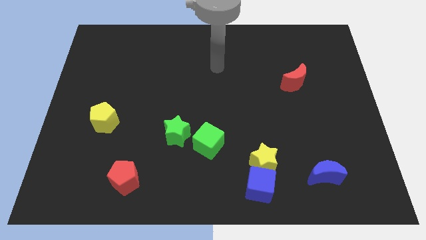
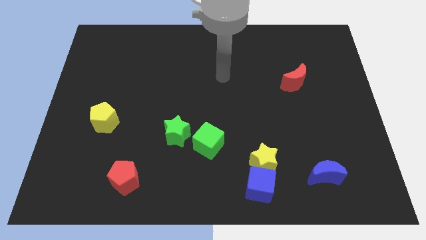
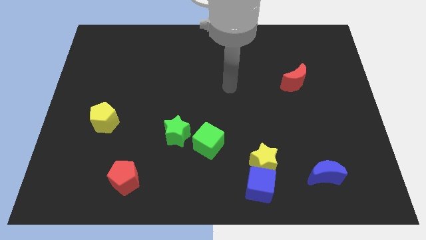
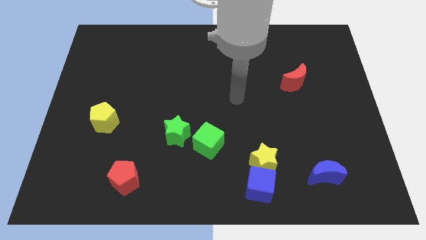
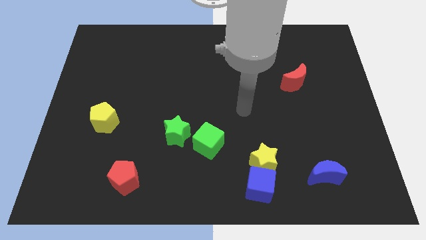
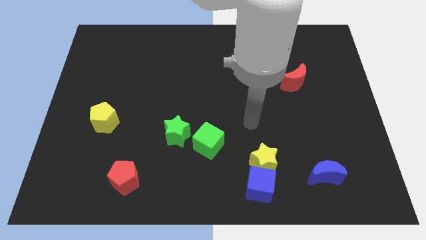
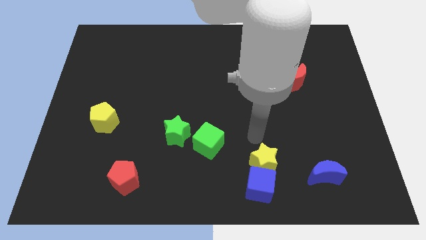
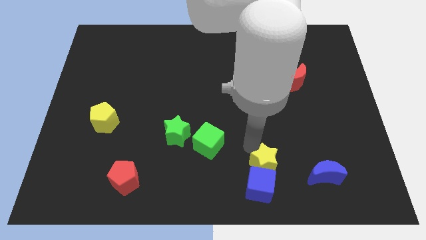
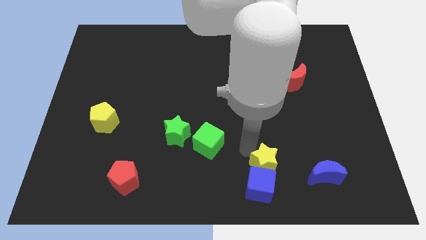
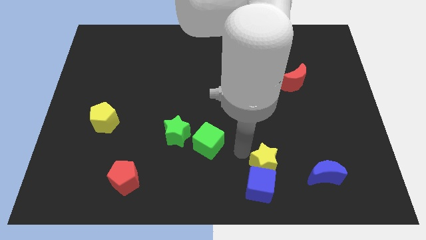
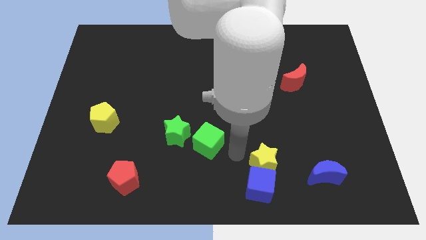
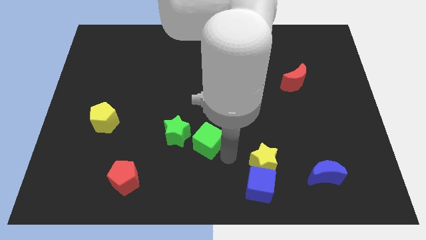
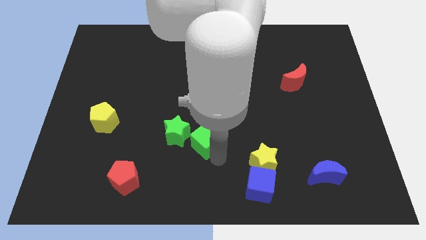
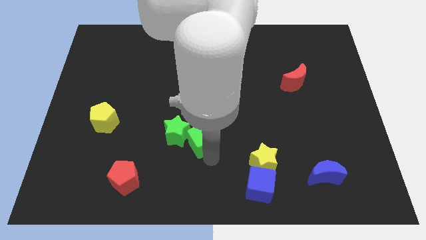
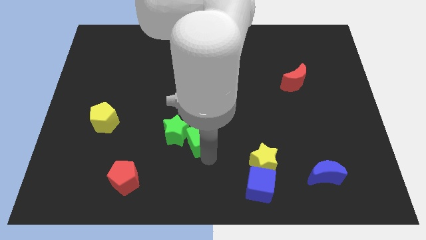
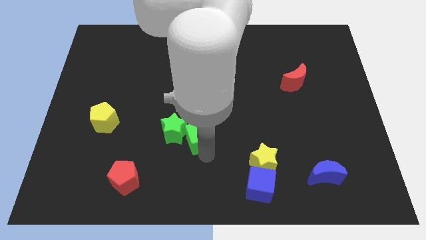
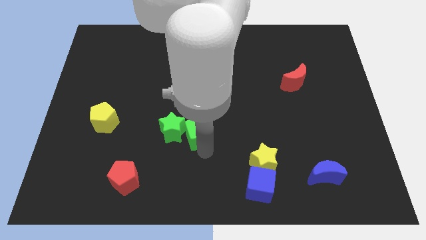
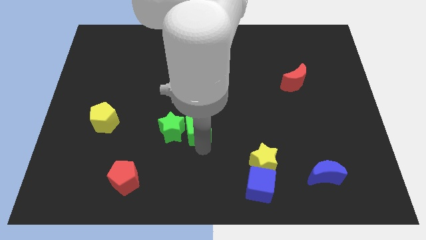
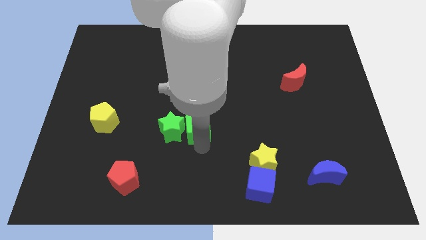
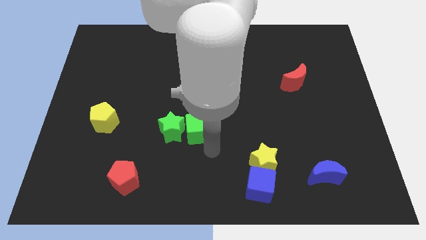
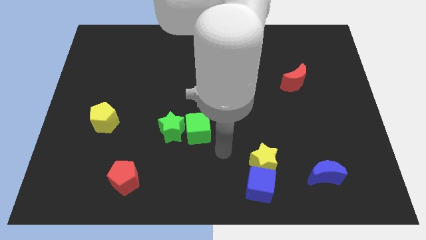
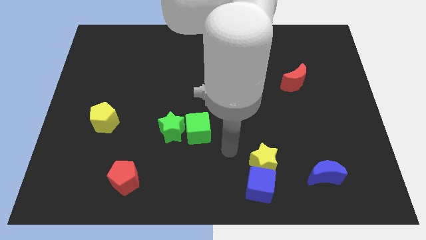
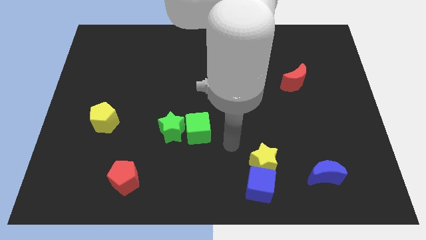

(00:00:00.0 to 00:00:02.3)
move the green cube left to the green star

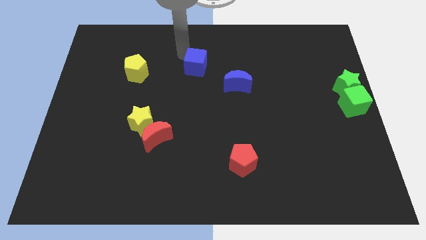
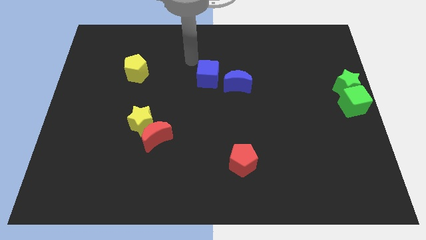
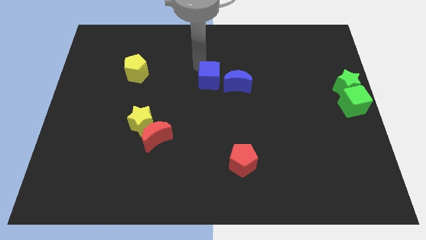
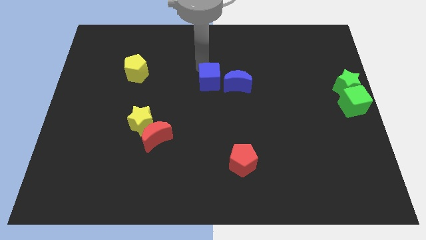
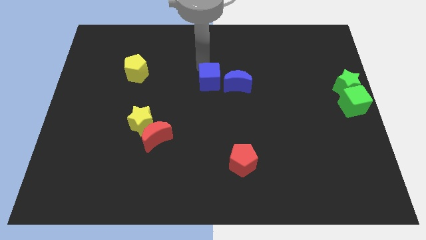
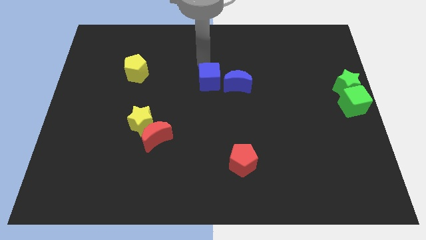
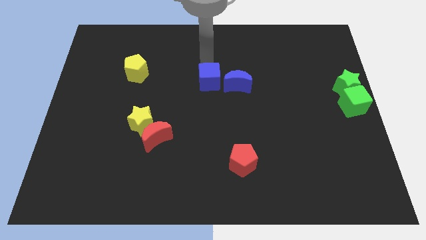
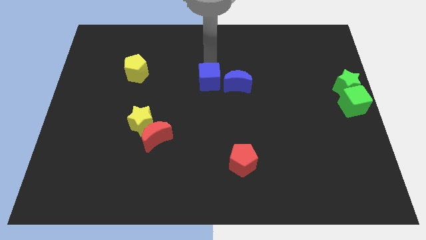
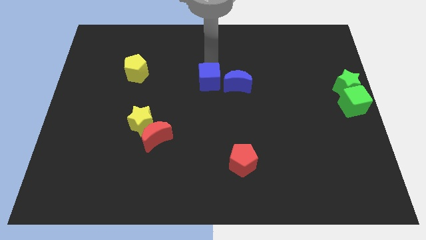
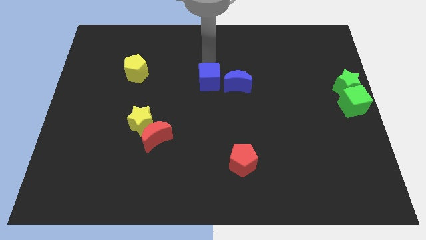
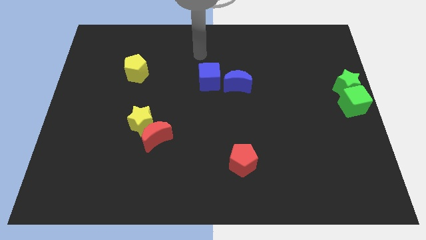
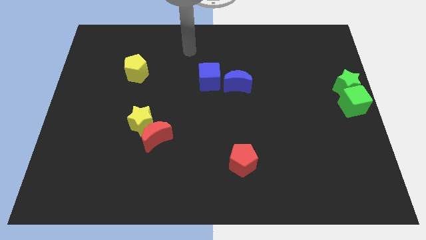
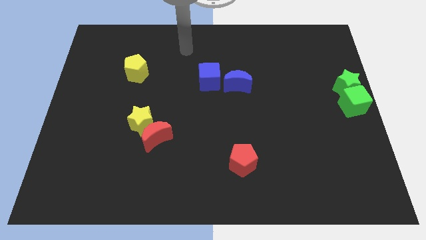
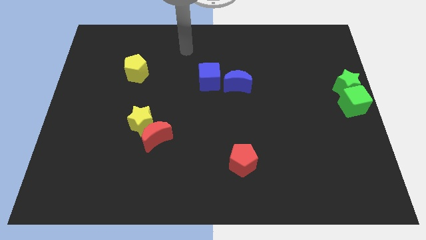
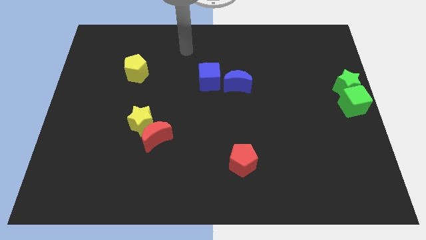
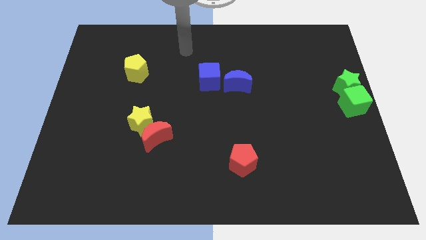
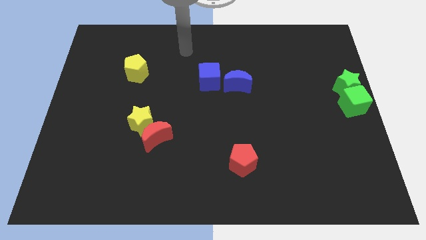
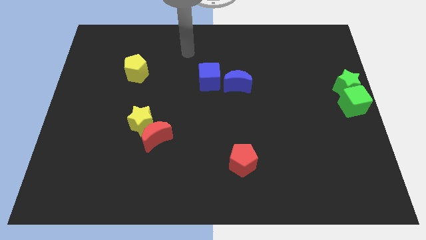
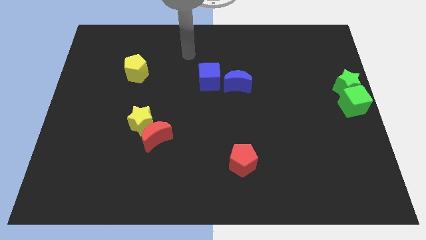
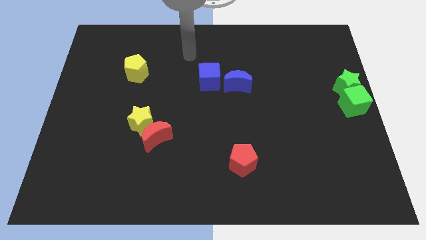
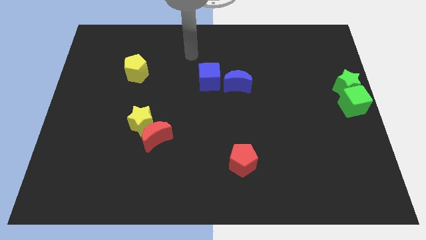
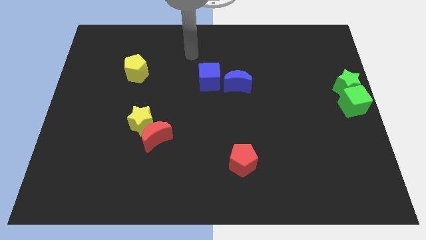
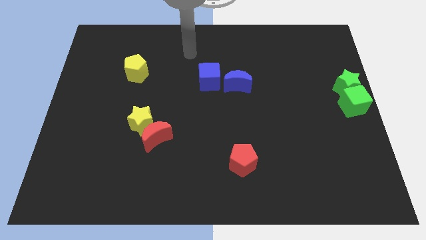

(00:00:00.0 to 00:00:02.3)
move the blue cube to the left side of the blue crescent

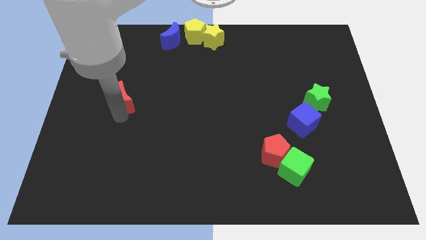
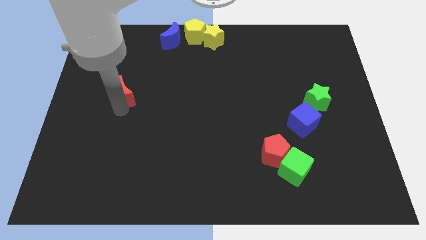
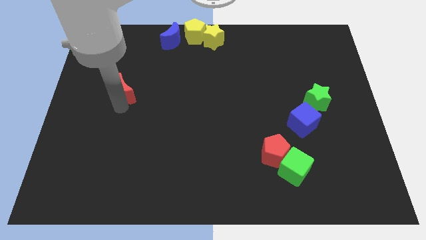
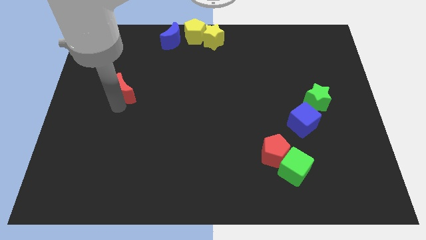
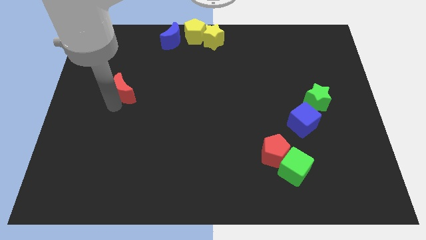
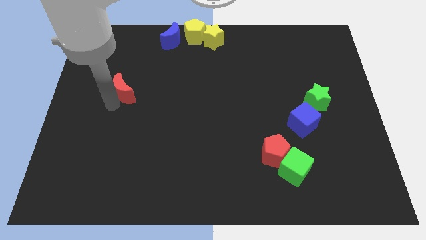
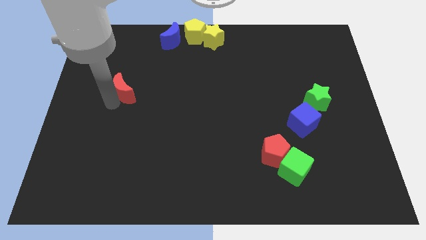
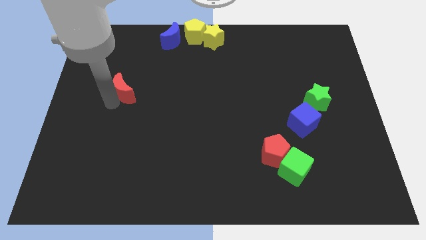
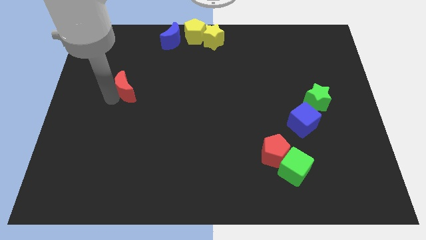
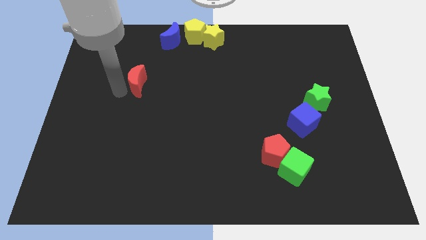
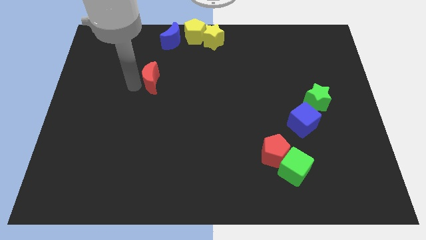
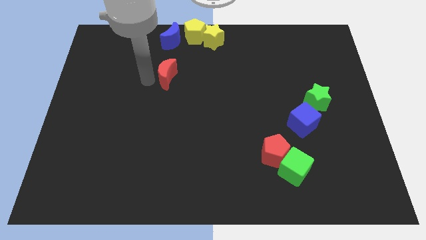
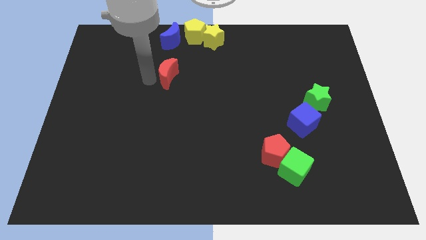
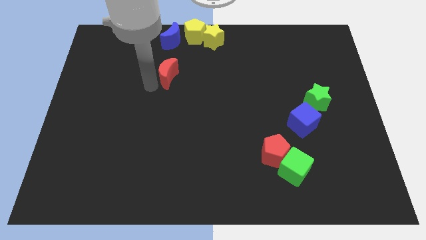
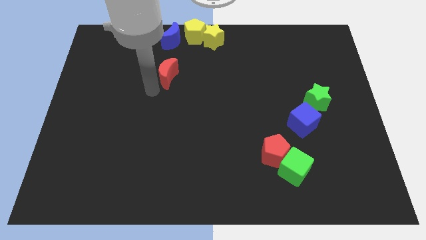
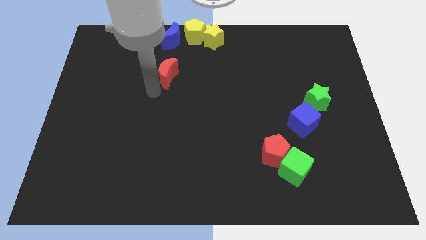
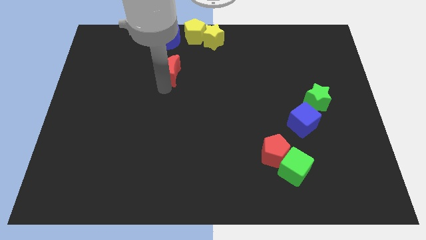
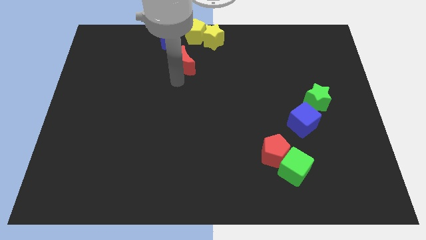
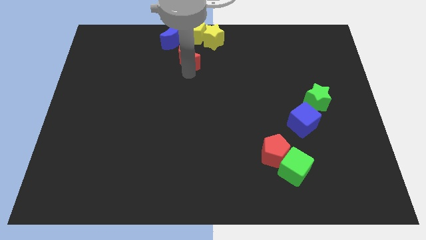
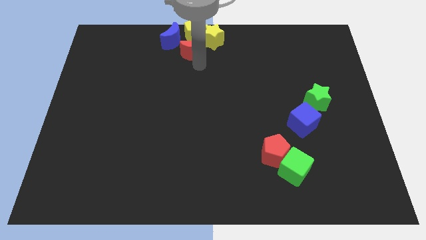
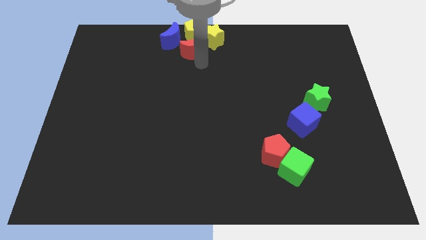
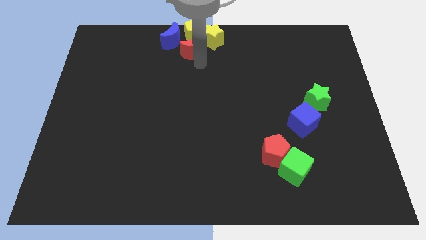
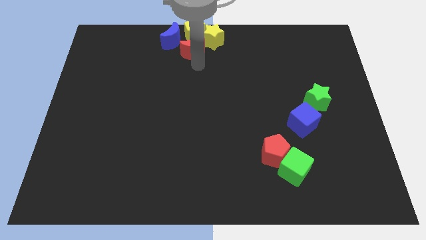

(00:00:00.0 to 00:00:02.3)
move red moon into group of blocks

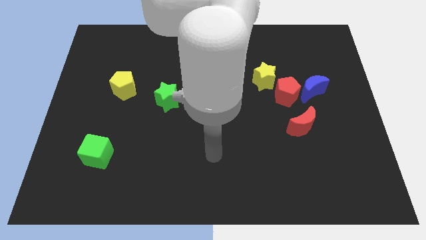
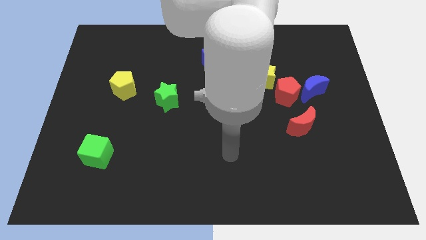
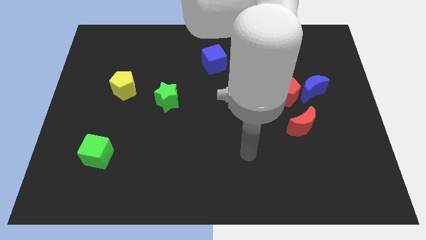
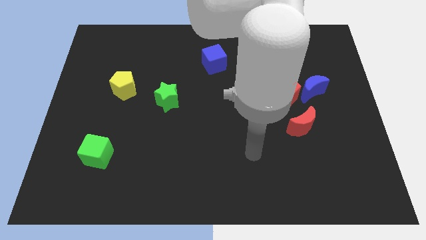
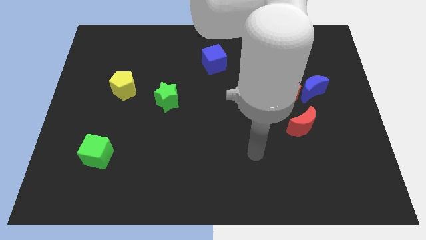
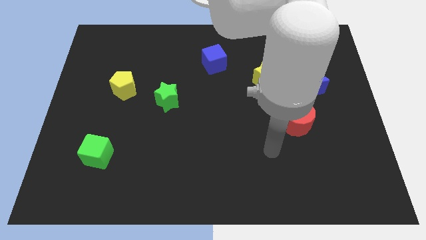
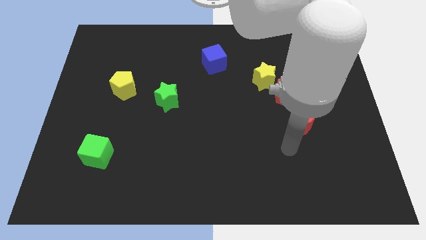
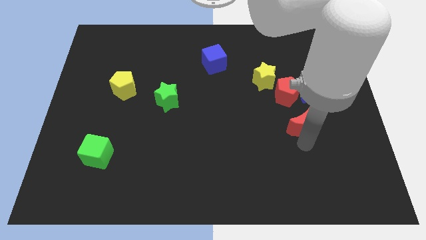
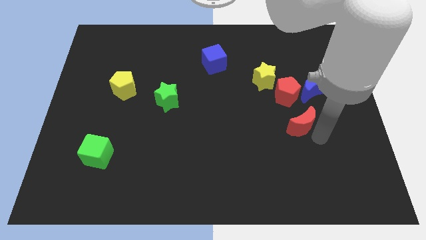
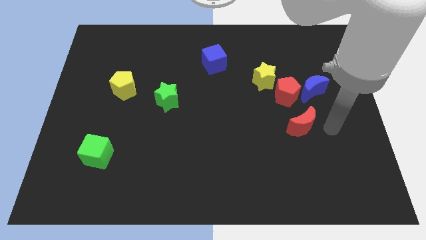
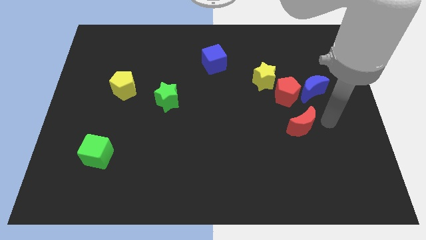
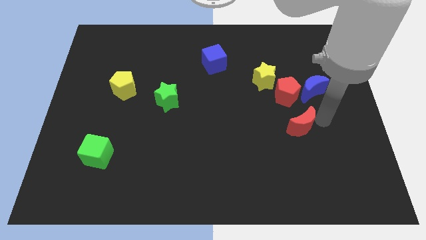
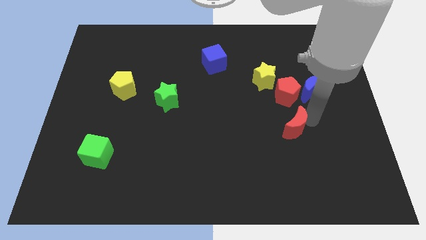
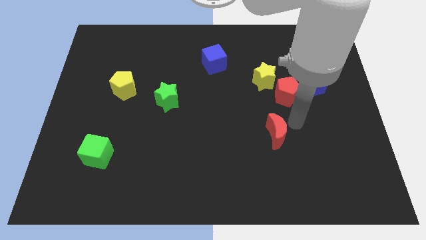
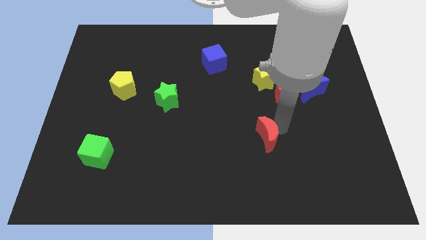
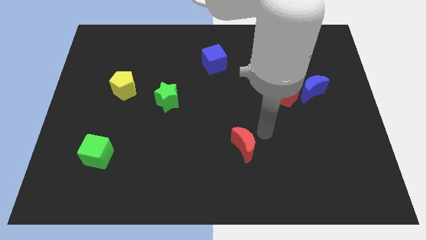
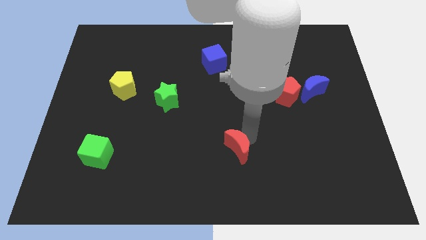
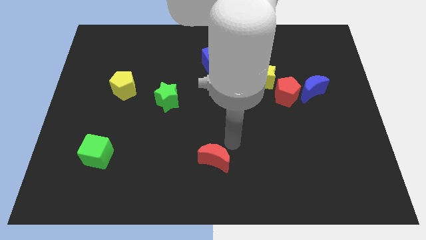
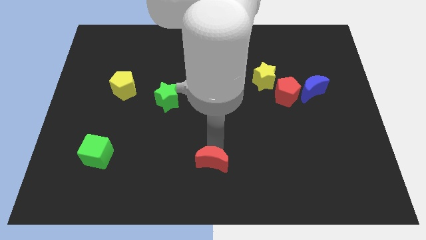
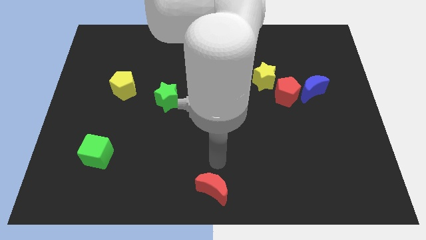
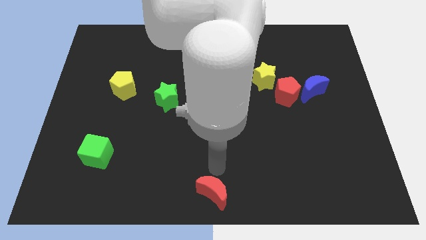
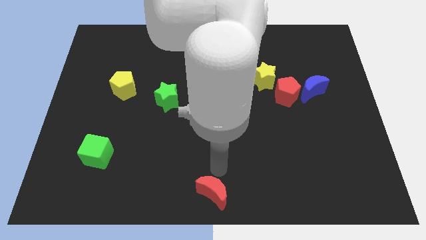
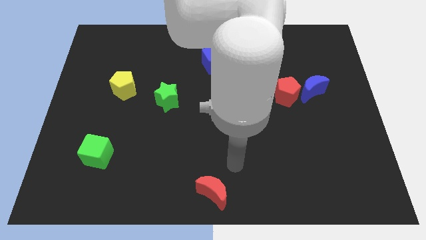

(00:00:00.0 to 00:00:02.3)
push the red crescent at the bottom center of the board
